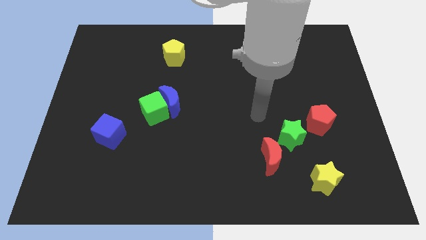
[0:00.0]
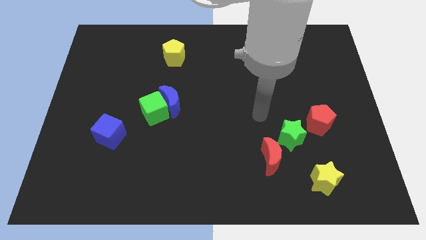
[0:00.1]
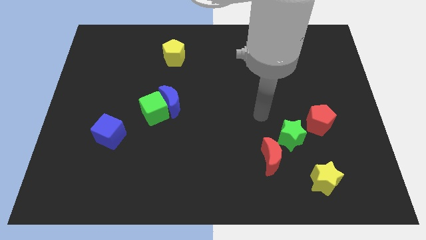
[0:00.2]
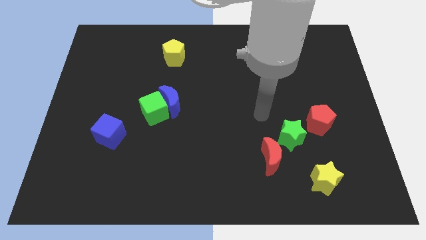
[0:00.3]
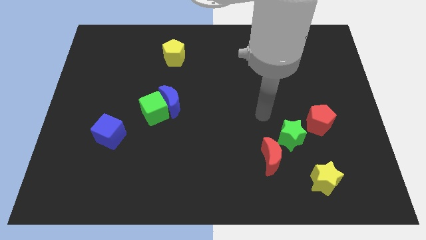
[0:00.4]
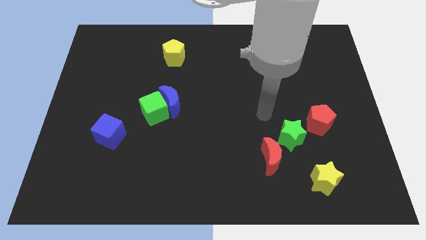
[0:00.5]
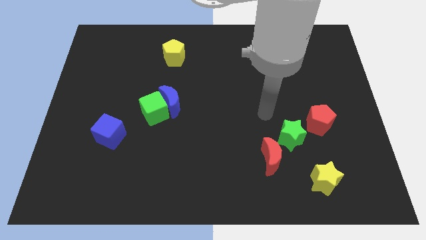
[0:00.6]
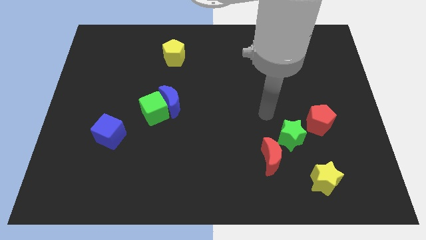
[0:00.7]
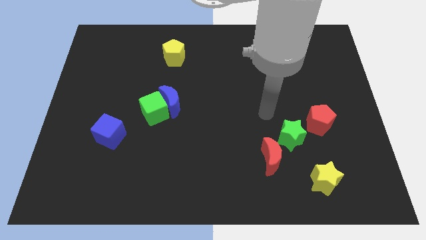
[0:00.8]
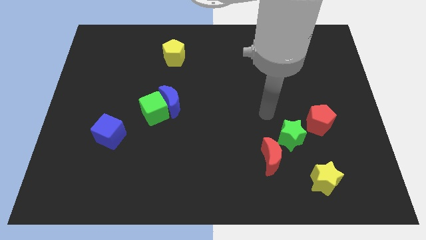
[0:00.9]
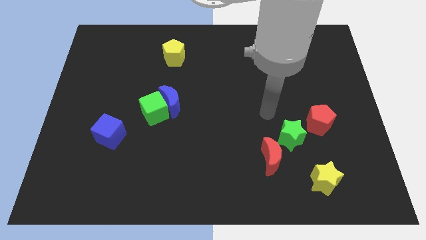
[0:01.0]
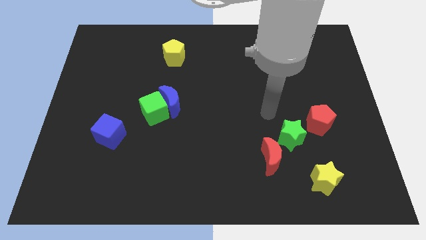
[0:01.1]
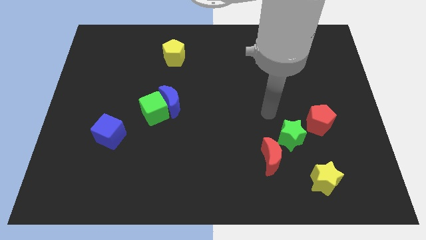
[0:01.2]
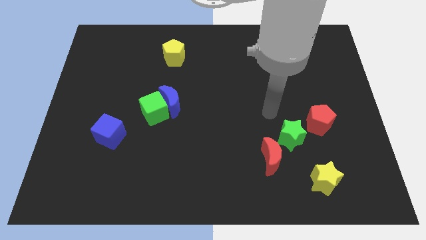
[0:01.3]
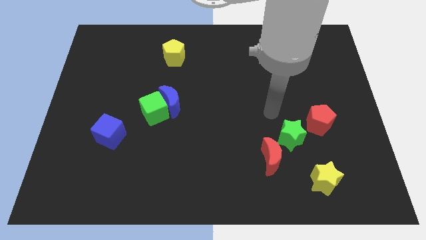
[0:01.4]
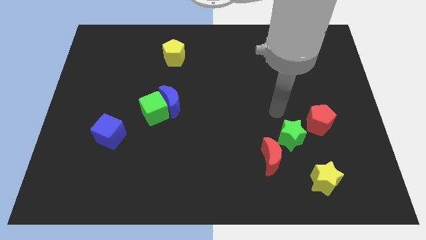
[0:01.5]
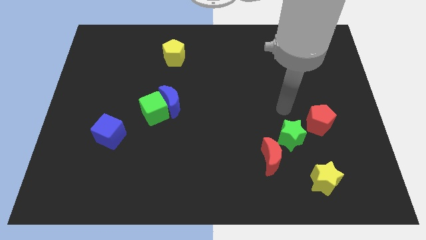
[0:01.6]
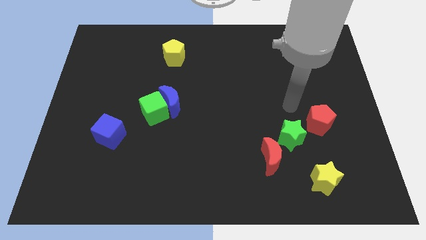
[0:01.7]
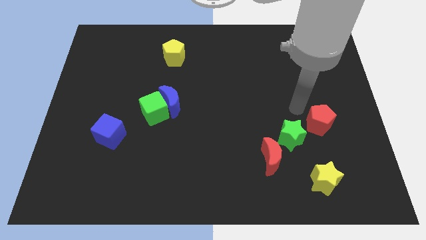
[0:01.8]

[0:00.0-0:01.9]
move your arm towards the red pentagon

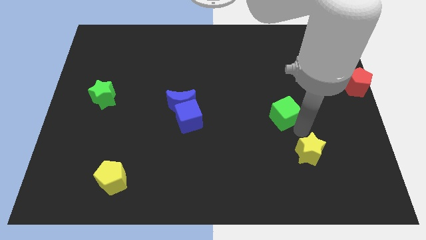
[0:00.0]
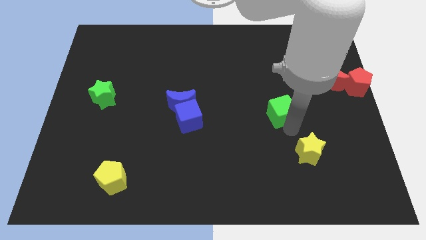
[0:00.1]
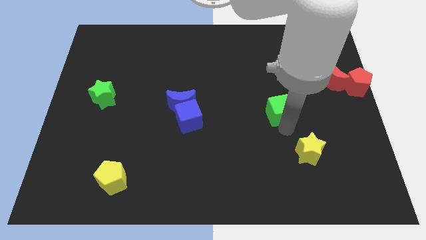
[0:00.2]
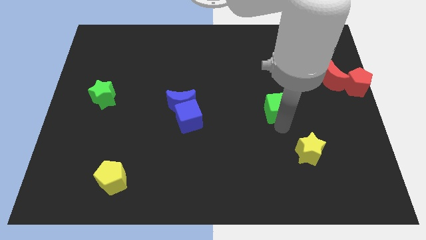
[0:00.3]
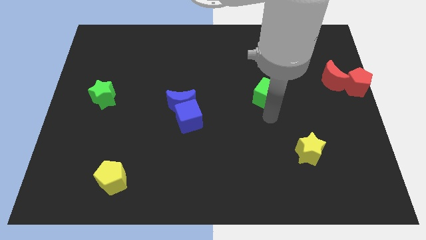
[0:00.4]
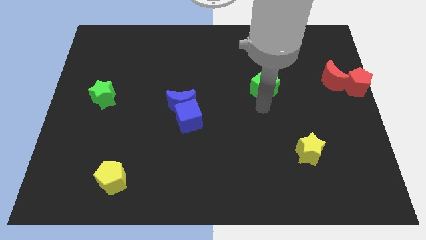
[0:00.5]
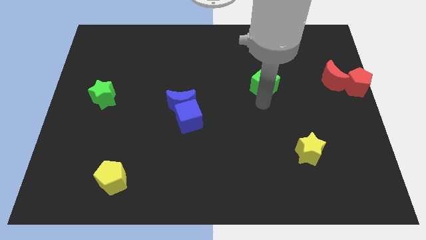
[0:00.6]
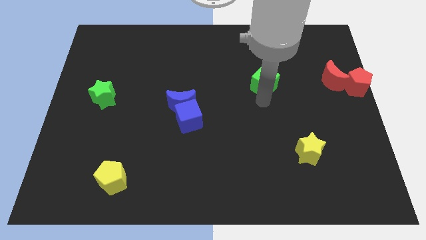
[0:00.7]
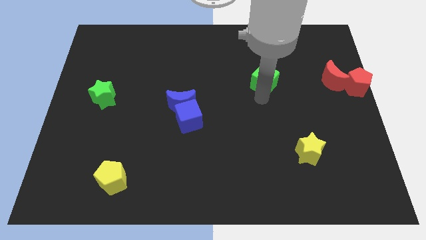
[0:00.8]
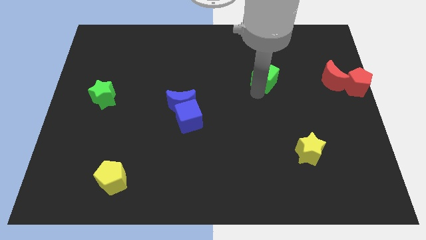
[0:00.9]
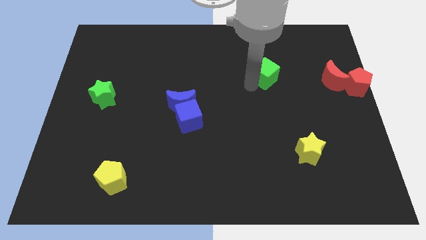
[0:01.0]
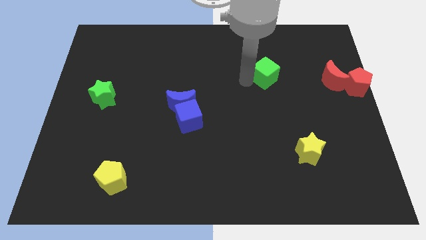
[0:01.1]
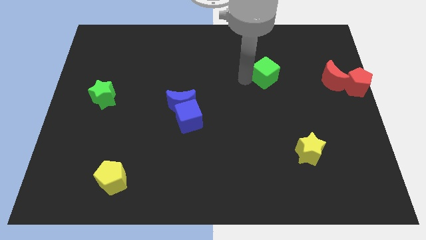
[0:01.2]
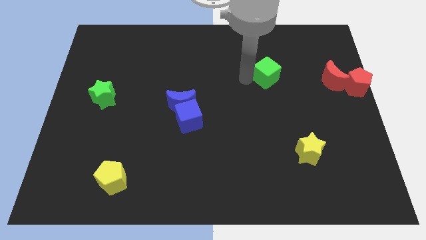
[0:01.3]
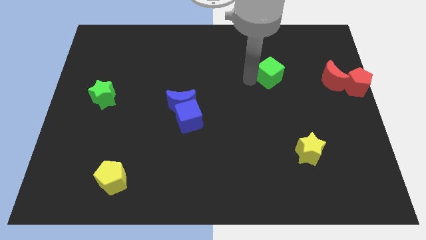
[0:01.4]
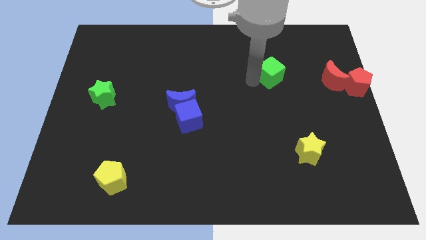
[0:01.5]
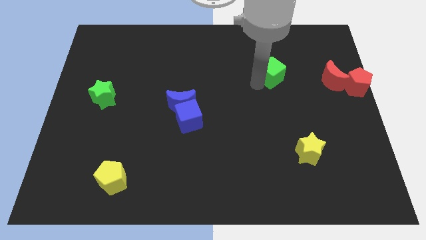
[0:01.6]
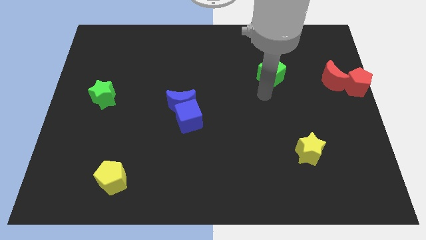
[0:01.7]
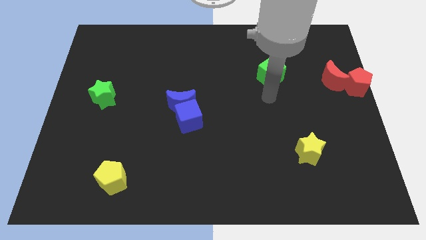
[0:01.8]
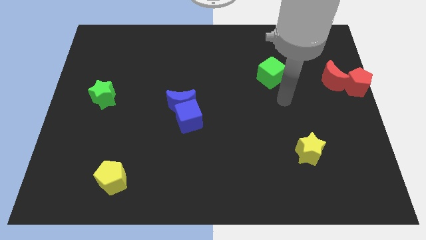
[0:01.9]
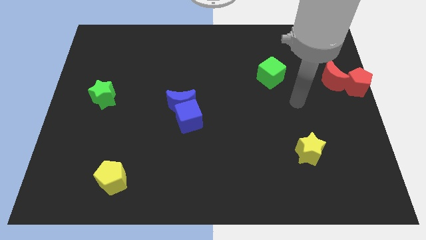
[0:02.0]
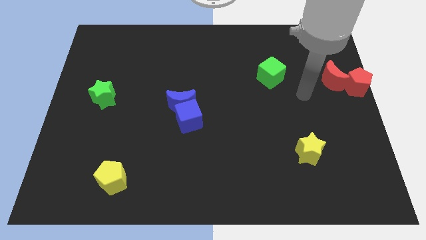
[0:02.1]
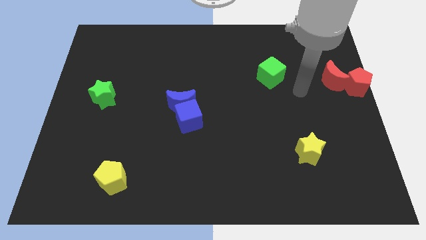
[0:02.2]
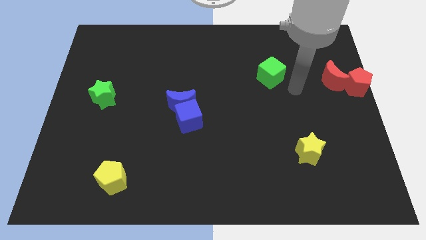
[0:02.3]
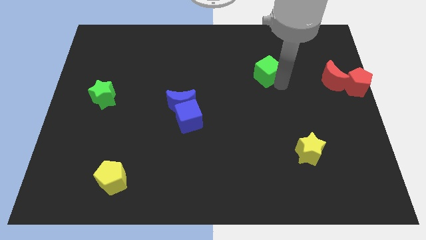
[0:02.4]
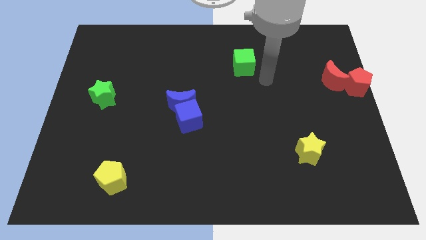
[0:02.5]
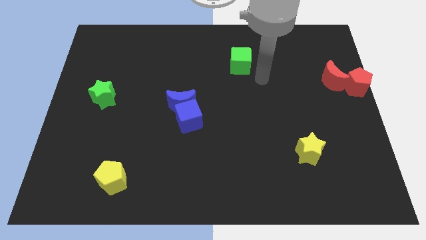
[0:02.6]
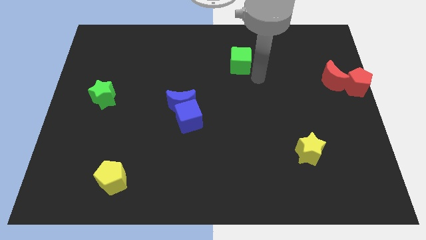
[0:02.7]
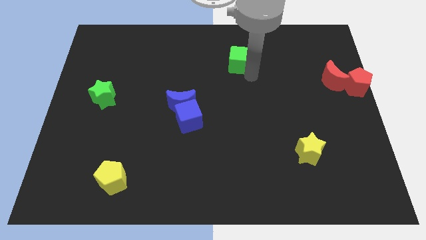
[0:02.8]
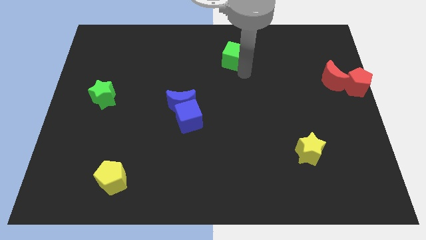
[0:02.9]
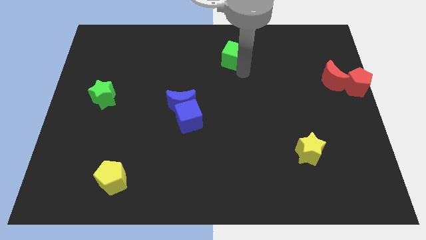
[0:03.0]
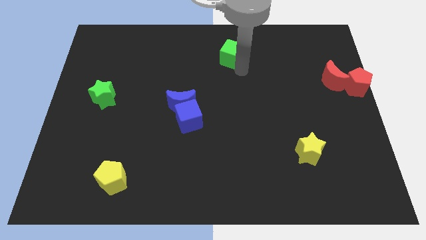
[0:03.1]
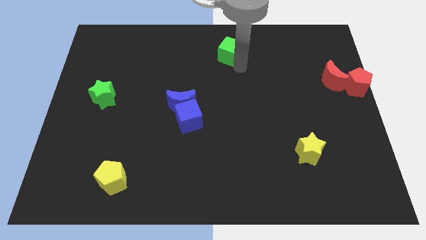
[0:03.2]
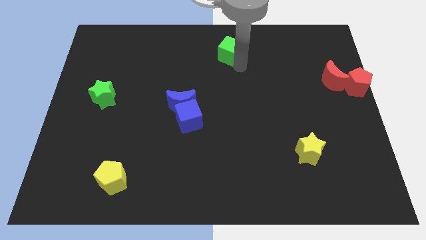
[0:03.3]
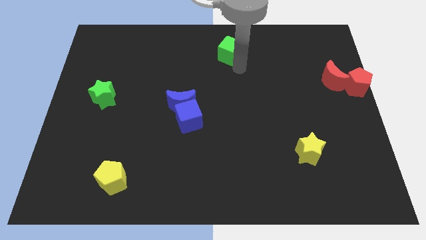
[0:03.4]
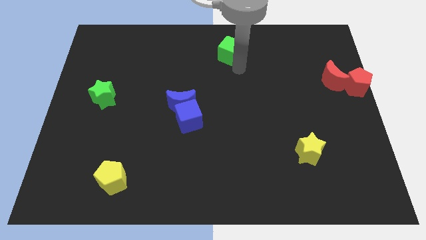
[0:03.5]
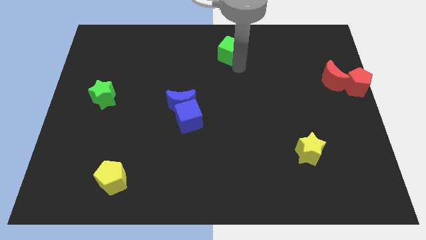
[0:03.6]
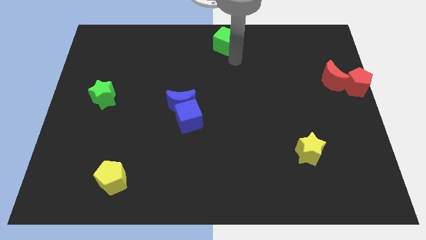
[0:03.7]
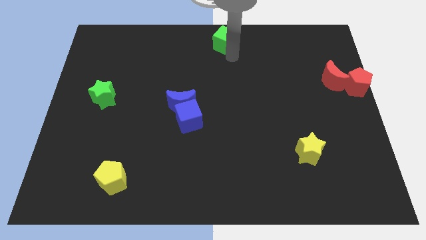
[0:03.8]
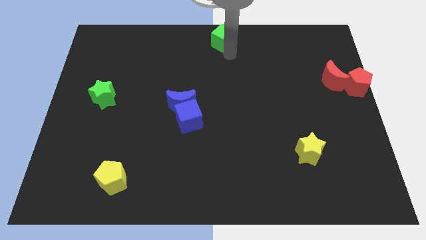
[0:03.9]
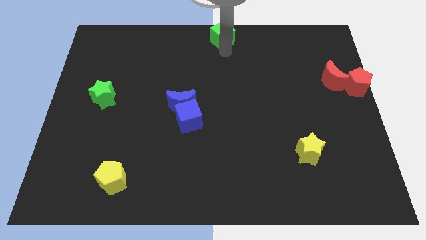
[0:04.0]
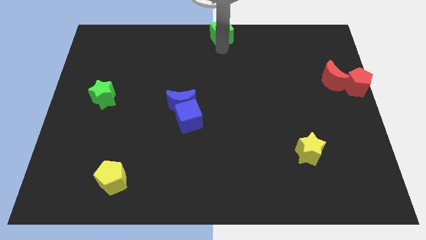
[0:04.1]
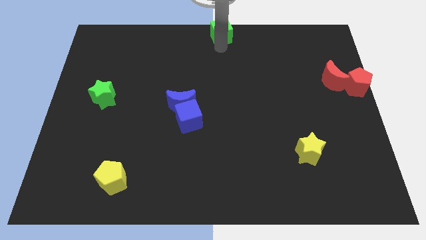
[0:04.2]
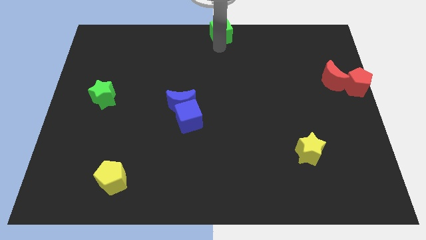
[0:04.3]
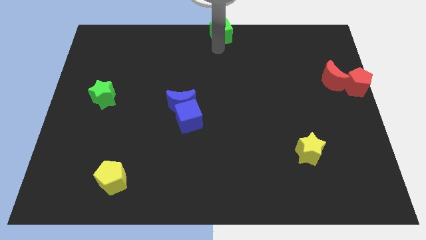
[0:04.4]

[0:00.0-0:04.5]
move the green cube to the top center

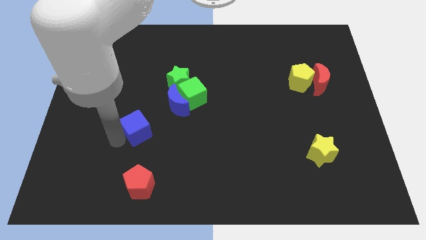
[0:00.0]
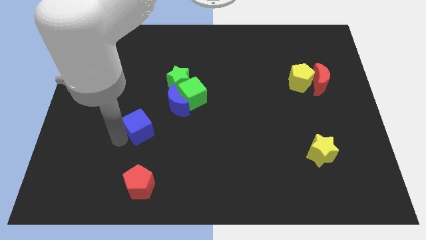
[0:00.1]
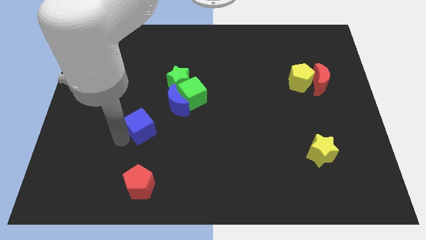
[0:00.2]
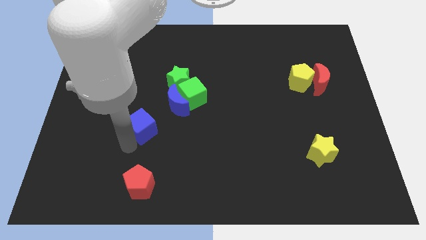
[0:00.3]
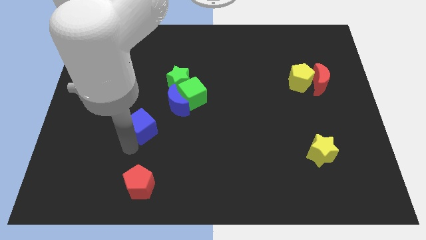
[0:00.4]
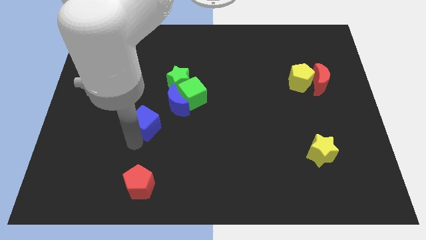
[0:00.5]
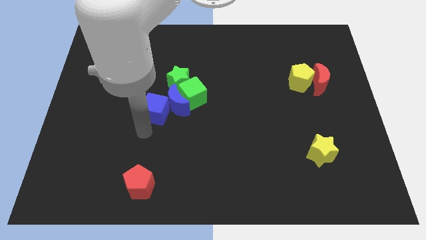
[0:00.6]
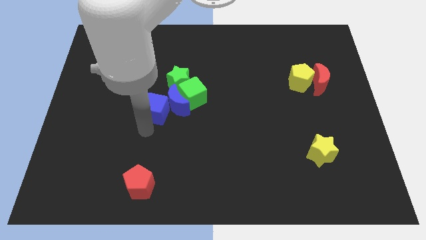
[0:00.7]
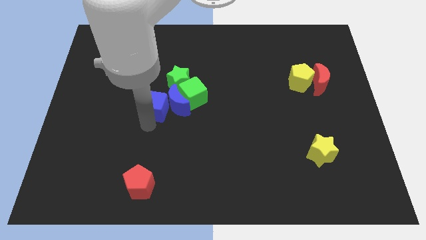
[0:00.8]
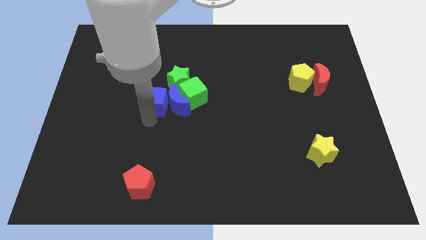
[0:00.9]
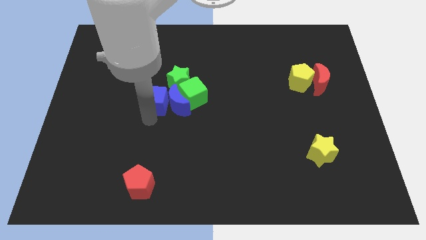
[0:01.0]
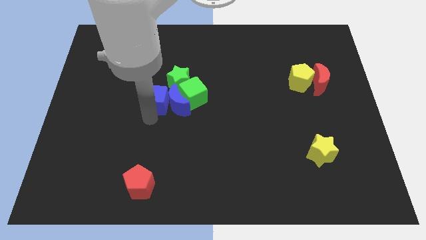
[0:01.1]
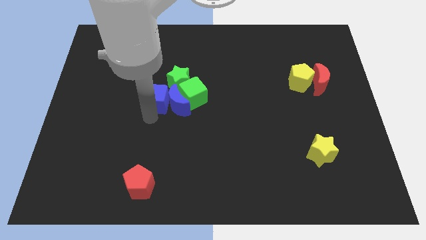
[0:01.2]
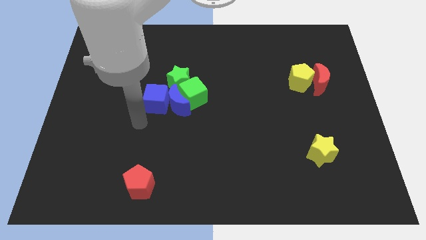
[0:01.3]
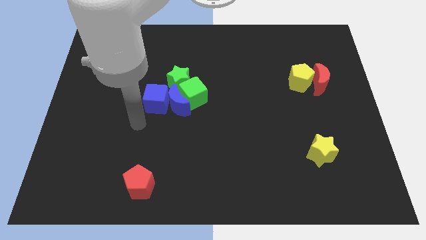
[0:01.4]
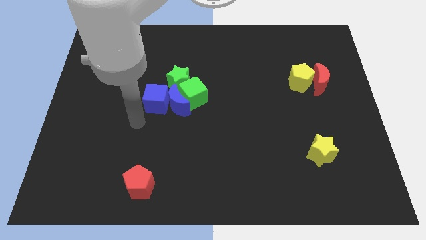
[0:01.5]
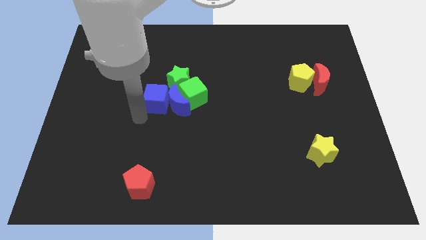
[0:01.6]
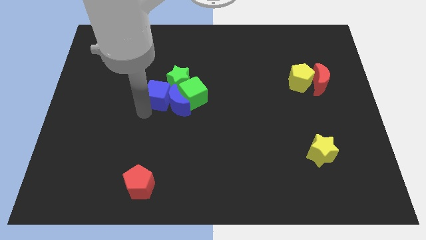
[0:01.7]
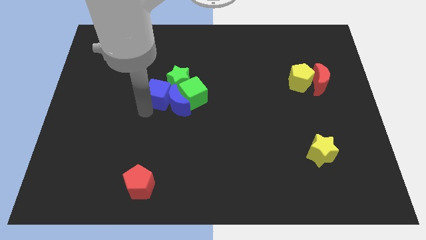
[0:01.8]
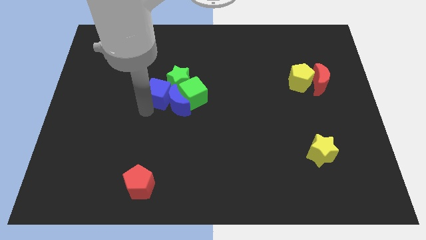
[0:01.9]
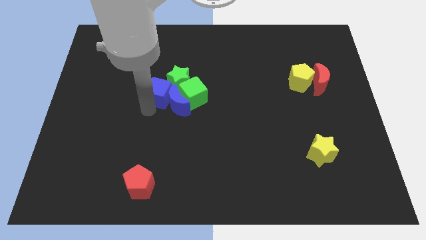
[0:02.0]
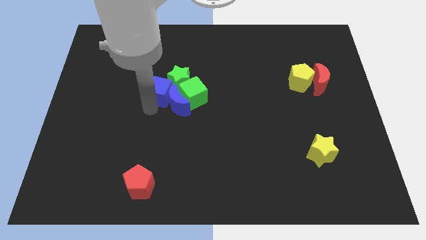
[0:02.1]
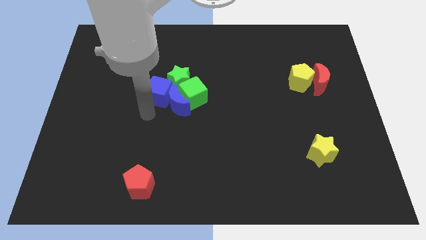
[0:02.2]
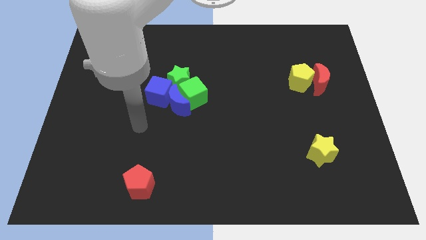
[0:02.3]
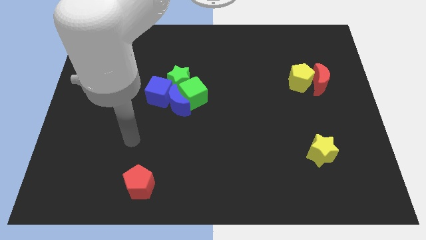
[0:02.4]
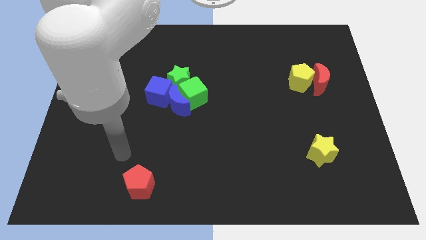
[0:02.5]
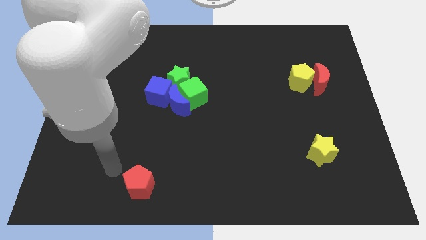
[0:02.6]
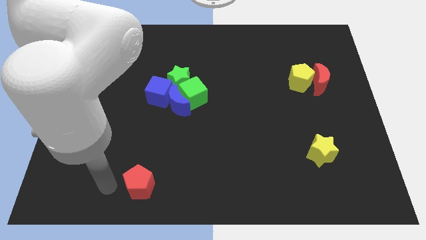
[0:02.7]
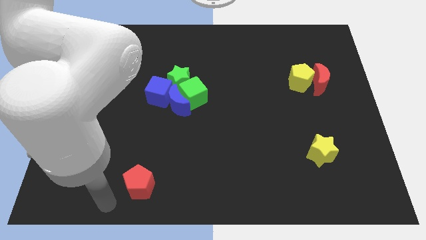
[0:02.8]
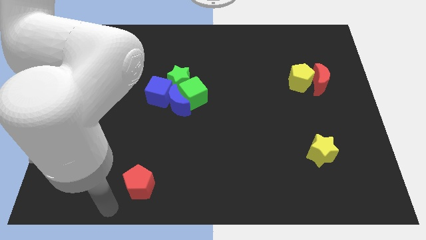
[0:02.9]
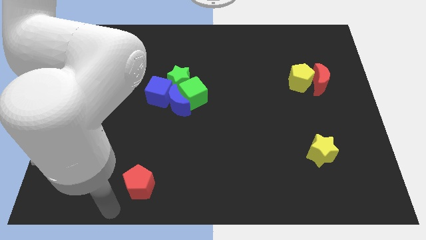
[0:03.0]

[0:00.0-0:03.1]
slide blue cube into the group of blue green blocks
